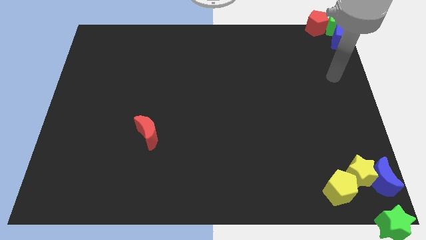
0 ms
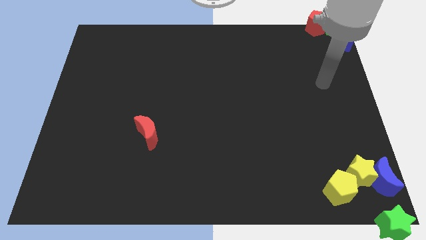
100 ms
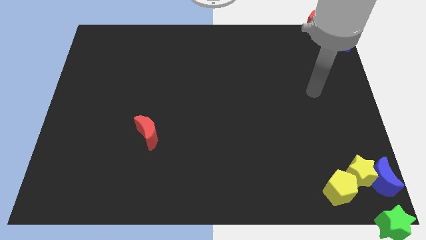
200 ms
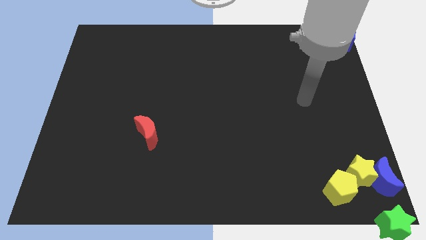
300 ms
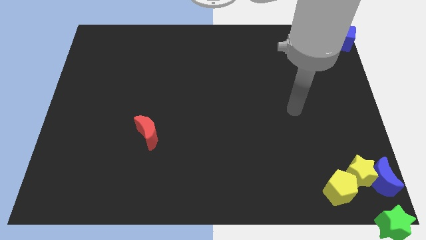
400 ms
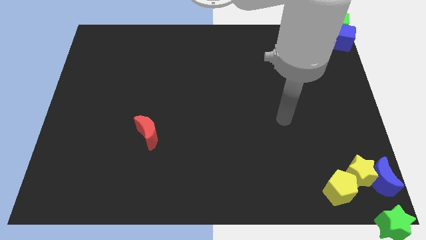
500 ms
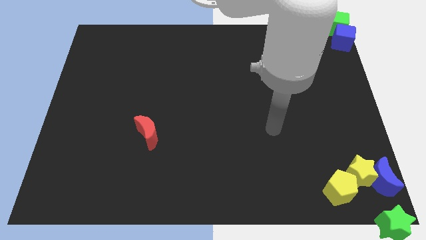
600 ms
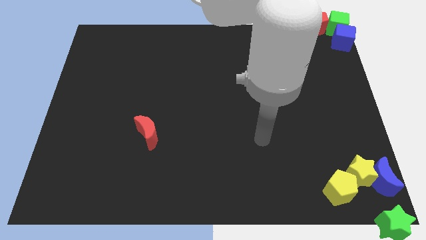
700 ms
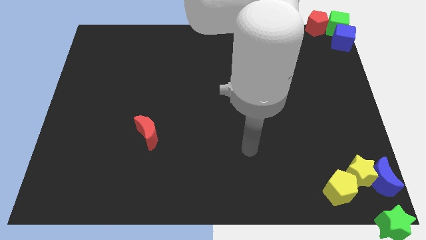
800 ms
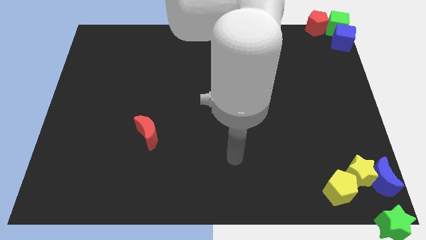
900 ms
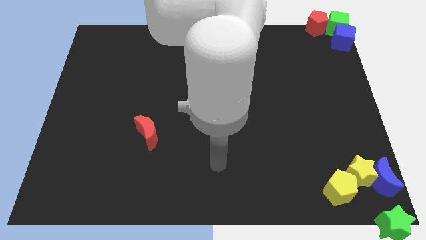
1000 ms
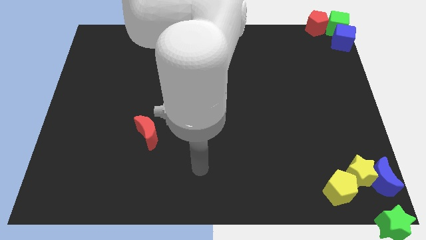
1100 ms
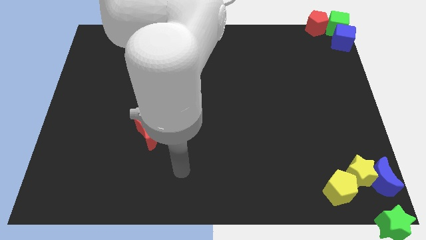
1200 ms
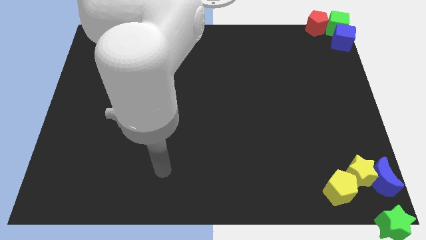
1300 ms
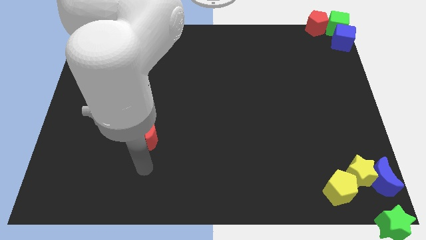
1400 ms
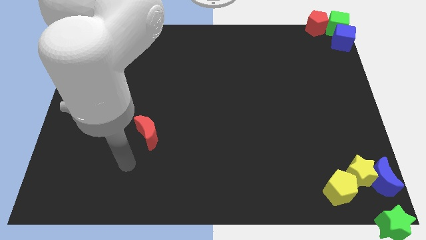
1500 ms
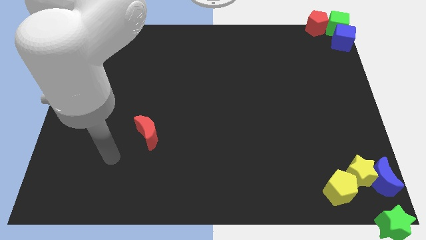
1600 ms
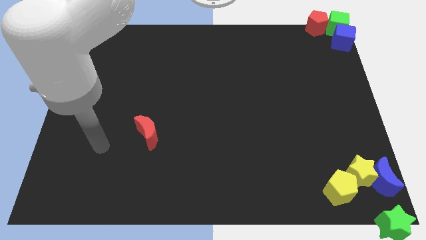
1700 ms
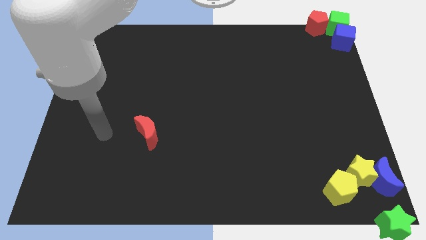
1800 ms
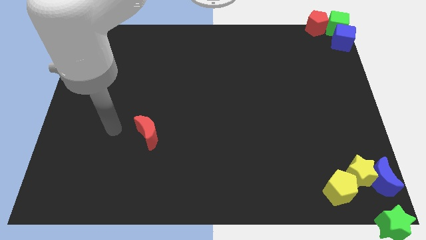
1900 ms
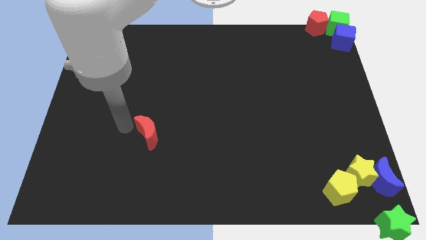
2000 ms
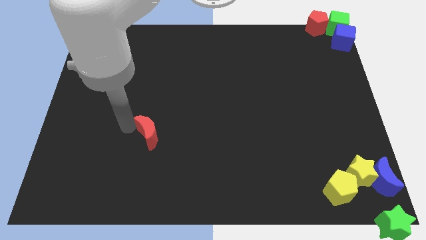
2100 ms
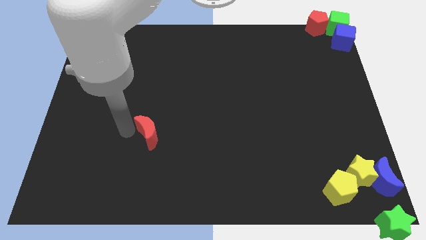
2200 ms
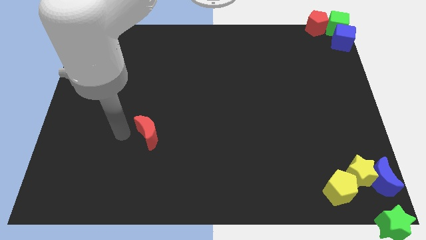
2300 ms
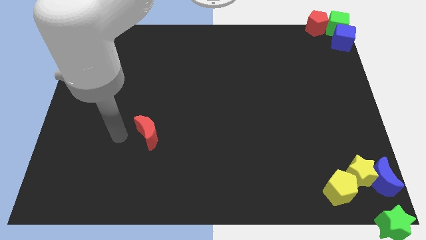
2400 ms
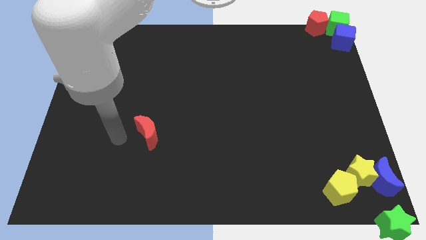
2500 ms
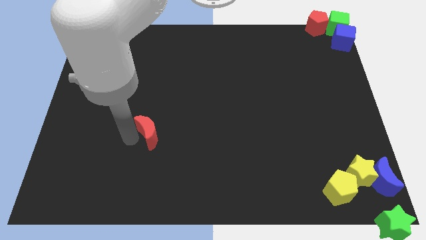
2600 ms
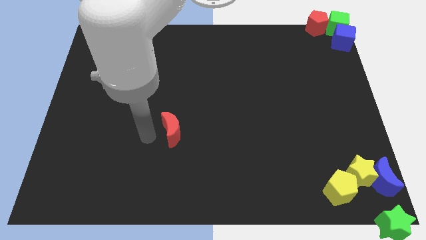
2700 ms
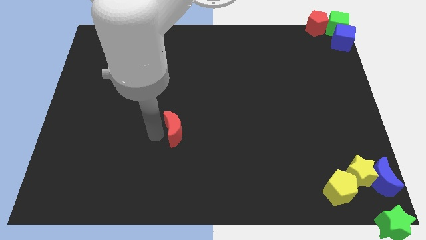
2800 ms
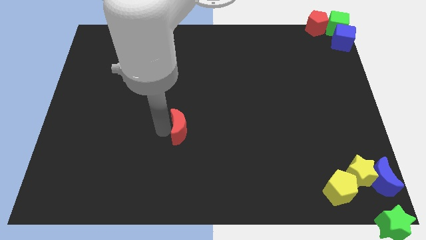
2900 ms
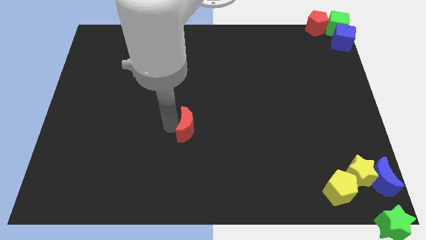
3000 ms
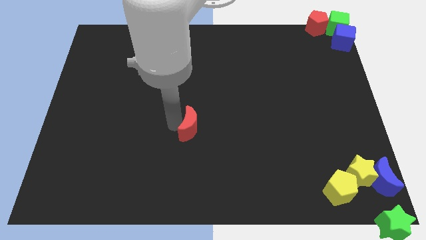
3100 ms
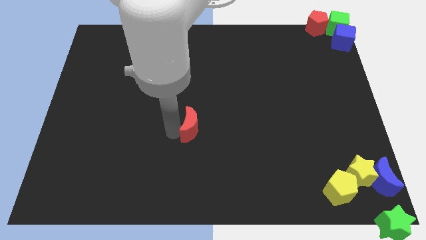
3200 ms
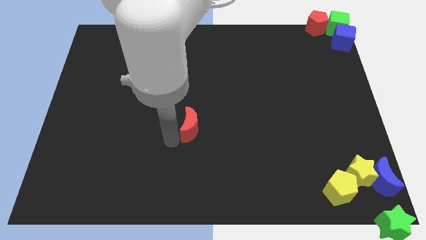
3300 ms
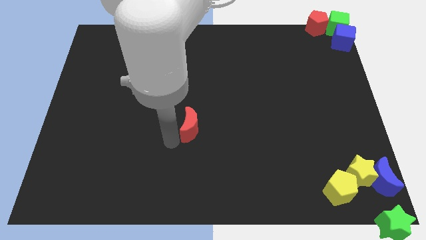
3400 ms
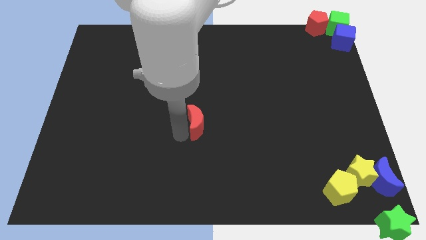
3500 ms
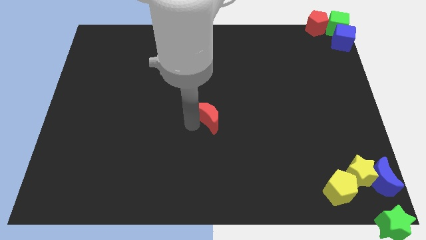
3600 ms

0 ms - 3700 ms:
drag the red moon towards the center of the board

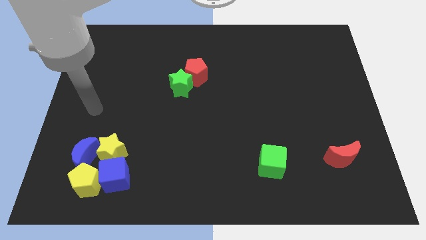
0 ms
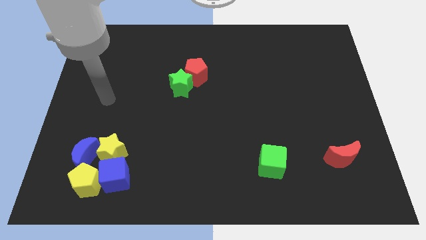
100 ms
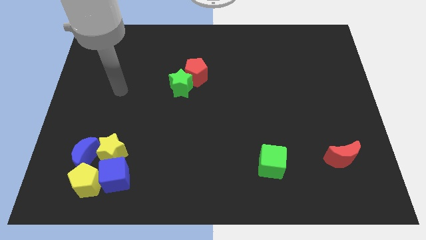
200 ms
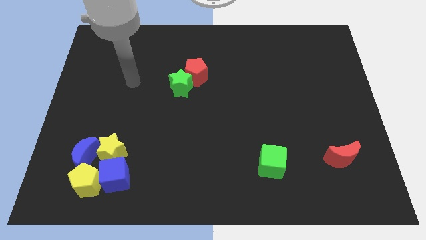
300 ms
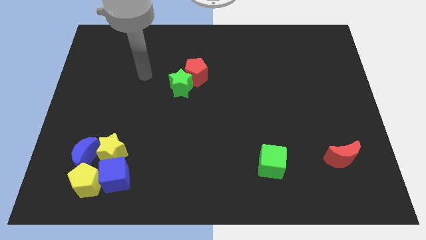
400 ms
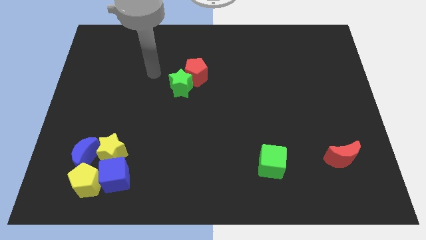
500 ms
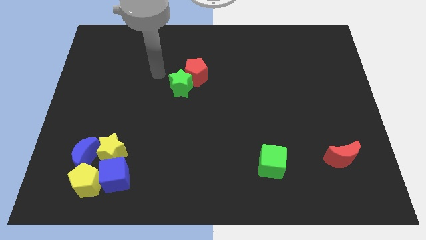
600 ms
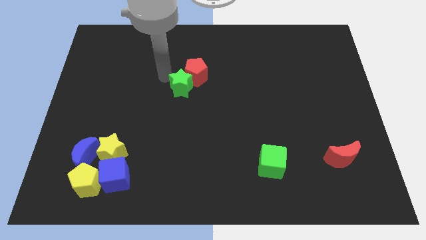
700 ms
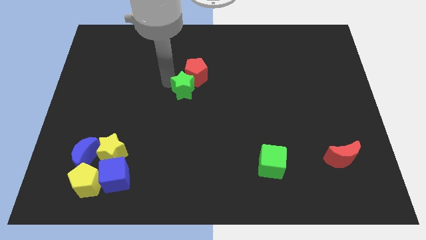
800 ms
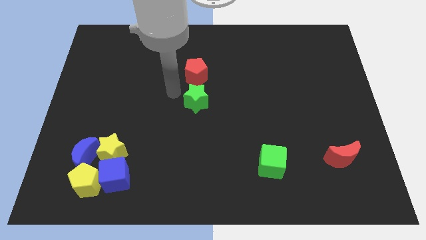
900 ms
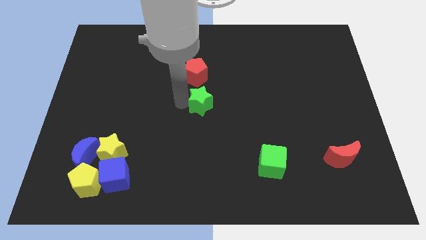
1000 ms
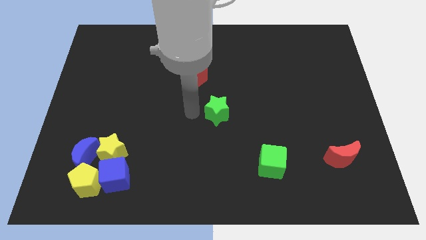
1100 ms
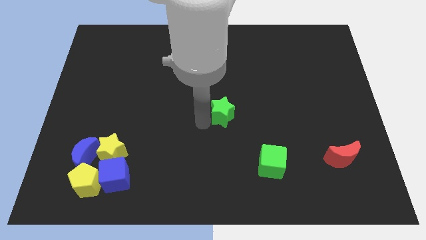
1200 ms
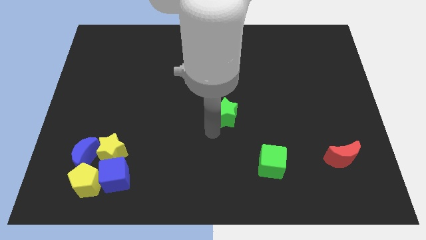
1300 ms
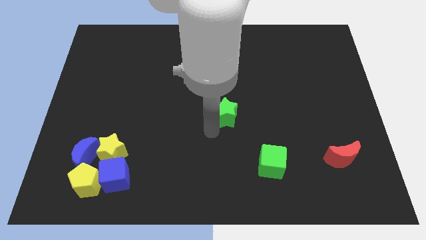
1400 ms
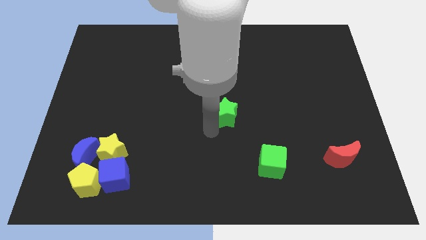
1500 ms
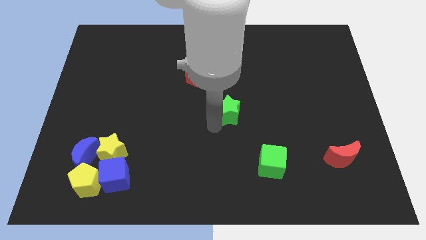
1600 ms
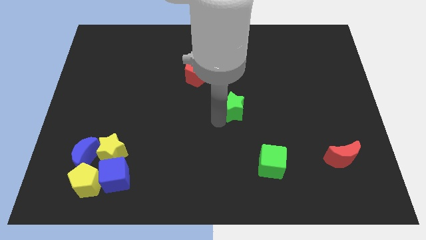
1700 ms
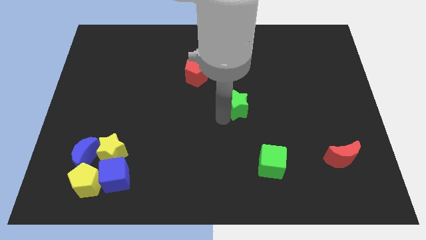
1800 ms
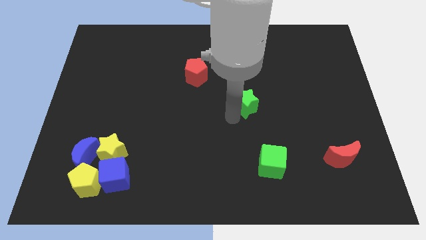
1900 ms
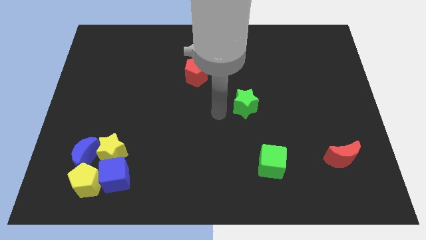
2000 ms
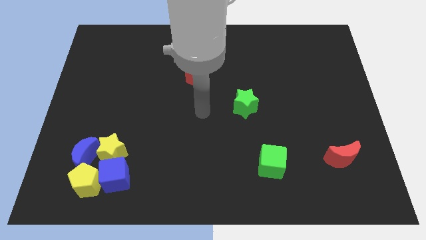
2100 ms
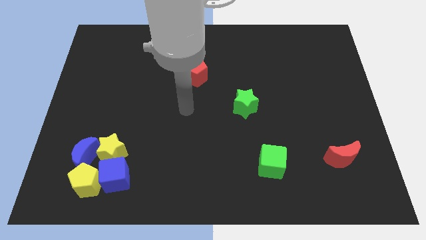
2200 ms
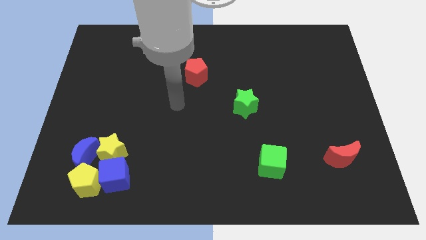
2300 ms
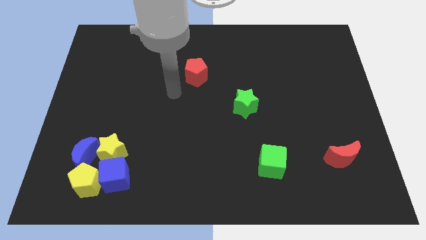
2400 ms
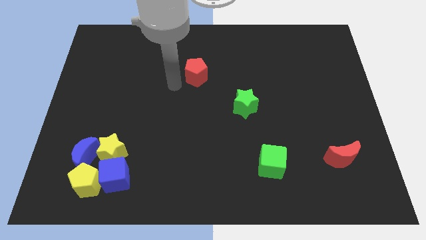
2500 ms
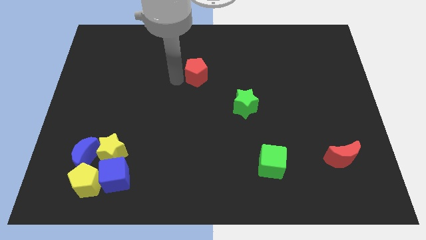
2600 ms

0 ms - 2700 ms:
separate the green star from the red pentagon

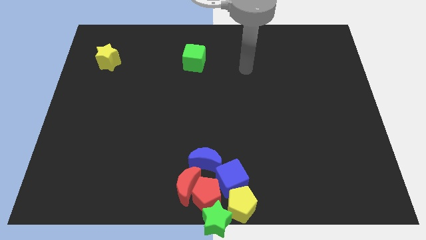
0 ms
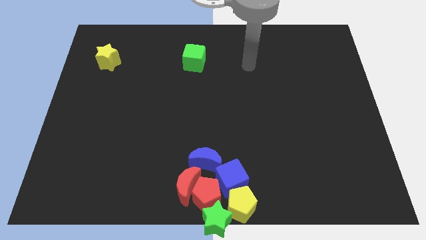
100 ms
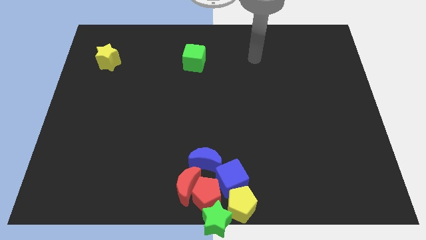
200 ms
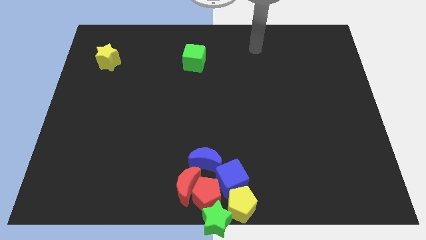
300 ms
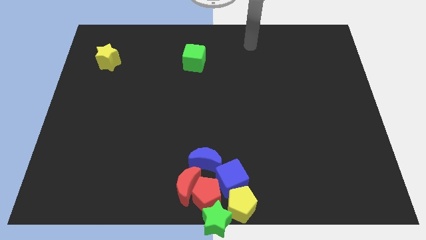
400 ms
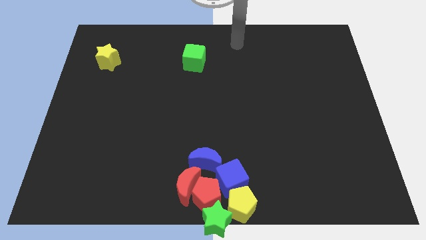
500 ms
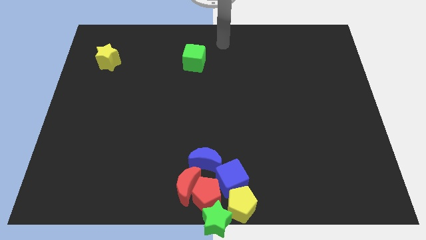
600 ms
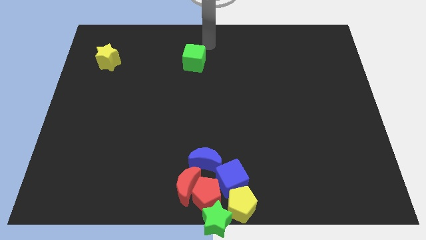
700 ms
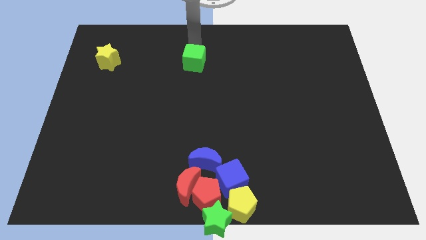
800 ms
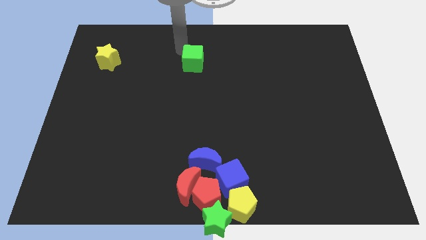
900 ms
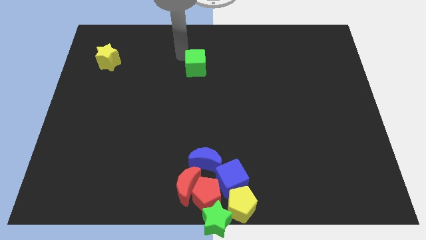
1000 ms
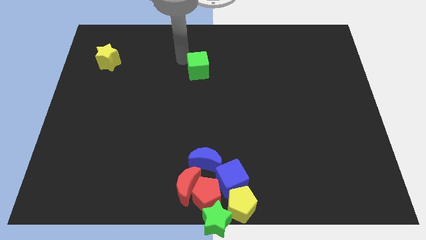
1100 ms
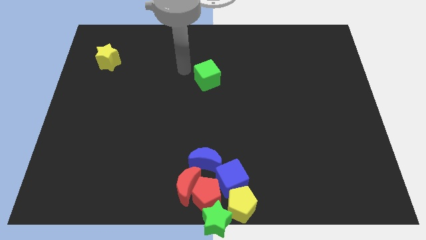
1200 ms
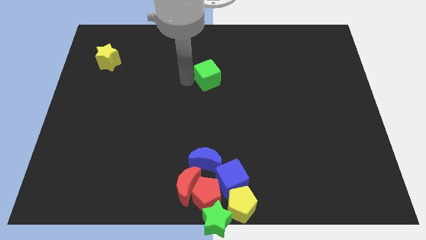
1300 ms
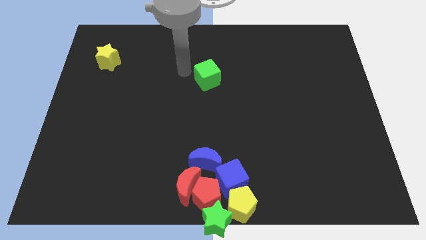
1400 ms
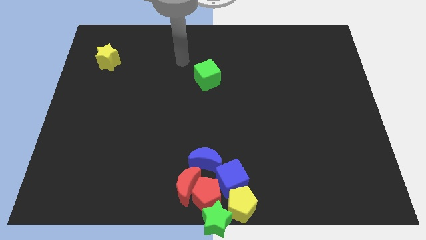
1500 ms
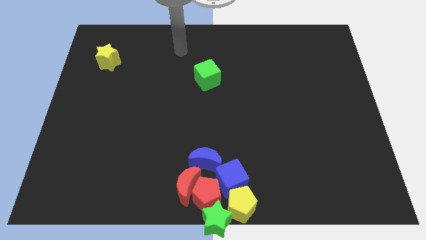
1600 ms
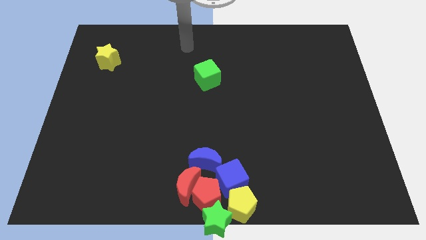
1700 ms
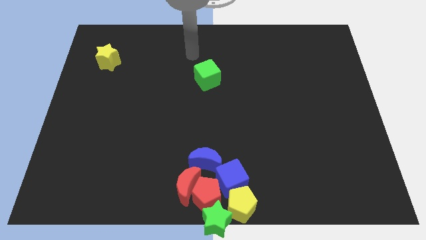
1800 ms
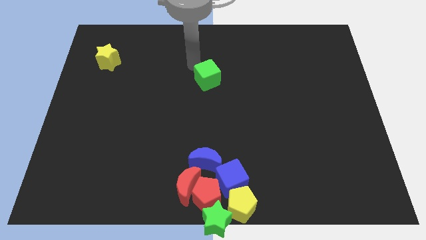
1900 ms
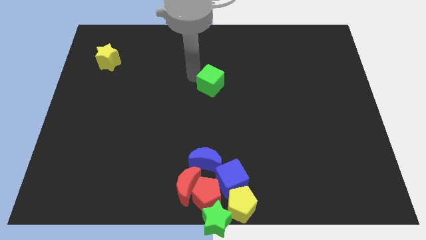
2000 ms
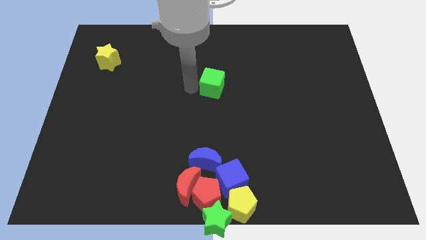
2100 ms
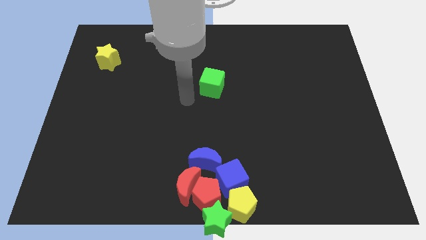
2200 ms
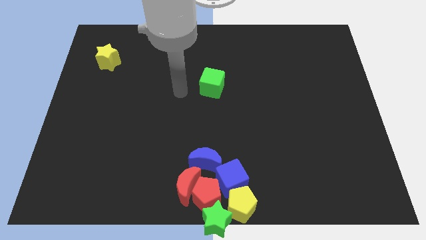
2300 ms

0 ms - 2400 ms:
place a green cube towards the center of the board

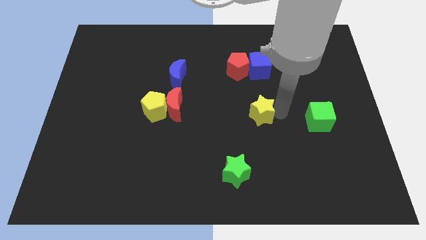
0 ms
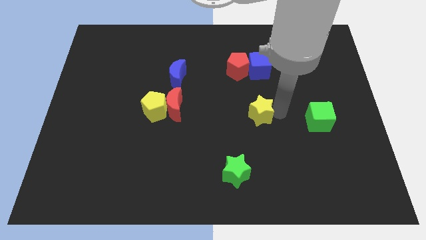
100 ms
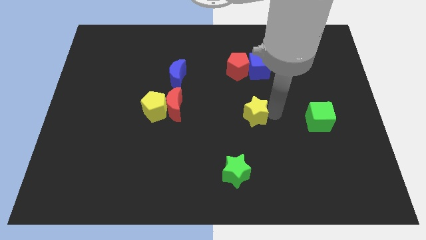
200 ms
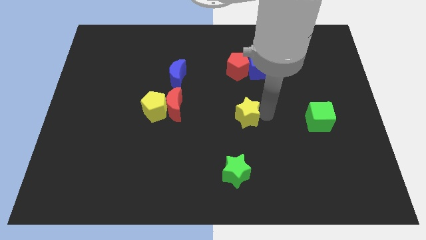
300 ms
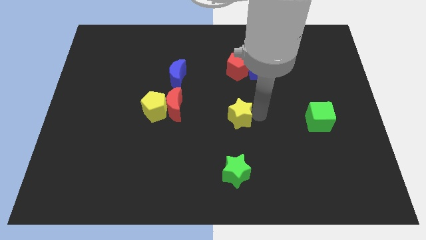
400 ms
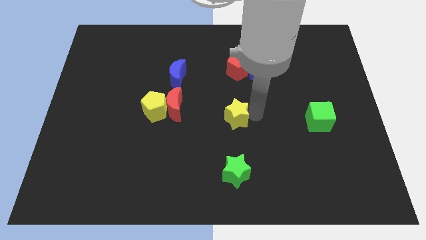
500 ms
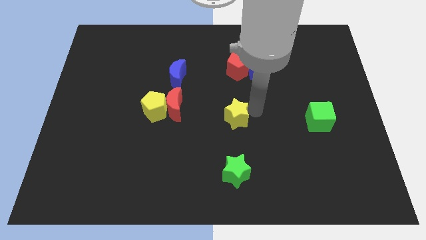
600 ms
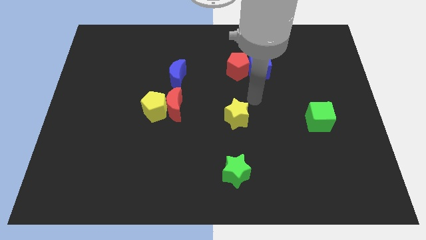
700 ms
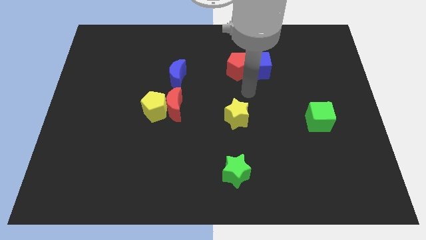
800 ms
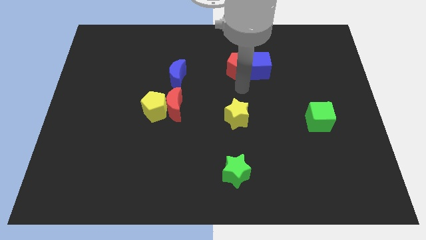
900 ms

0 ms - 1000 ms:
push yellow star vertically above green star
